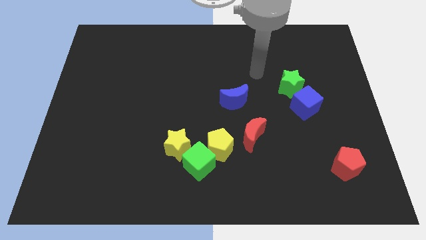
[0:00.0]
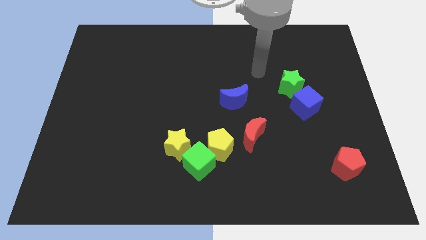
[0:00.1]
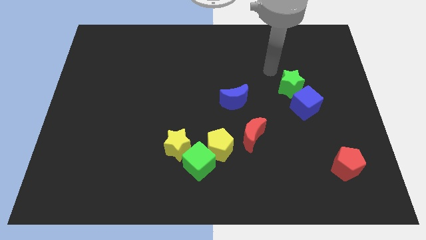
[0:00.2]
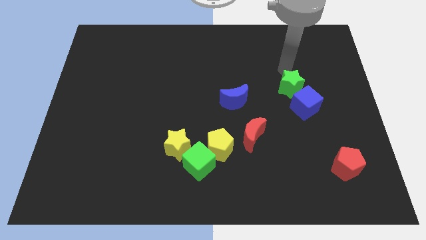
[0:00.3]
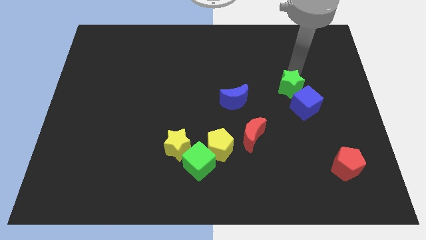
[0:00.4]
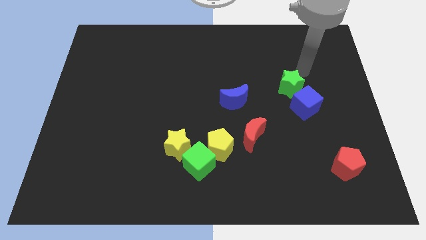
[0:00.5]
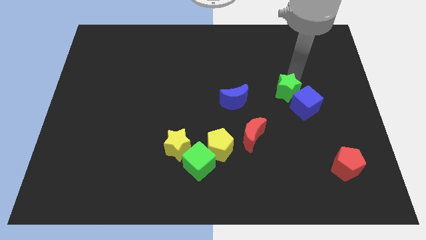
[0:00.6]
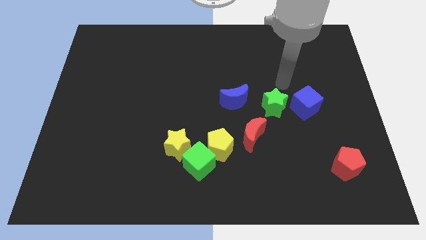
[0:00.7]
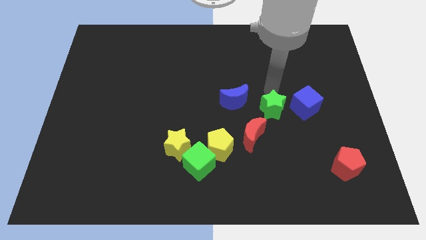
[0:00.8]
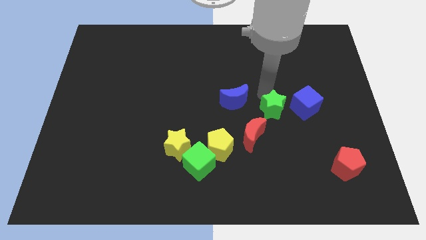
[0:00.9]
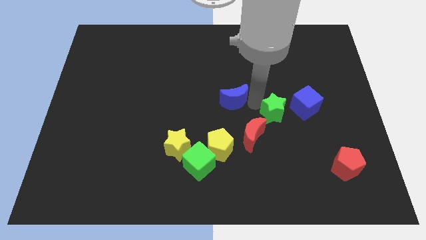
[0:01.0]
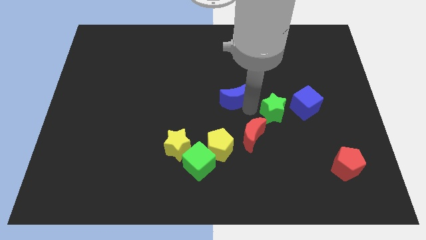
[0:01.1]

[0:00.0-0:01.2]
place the green star left to the blue cube

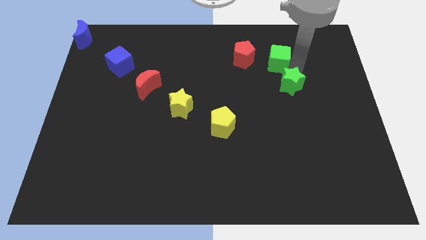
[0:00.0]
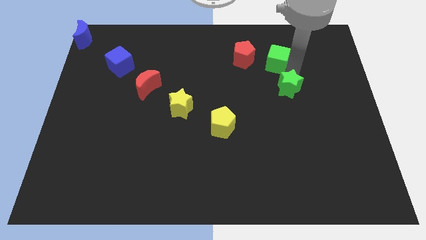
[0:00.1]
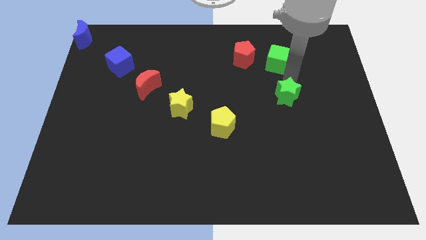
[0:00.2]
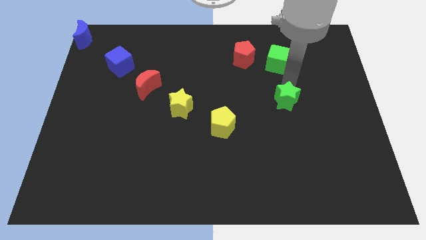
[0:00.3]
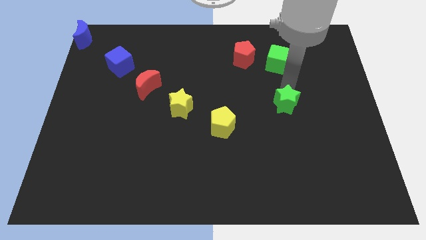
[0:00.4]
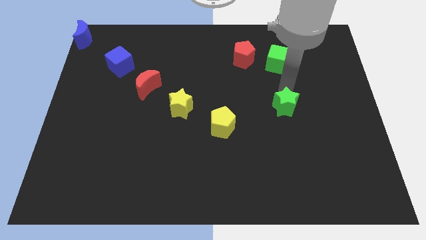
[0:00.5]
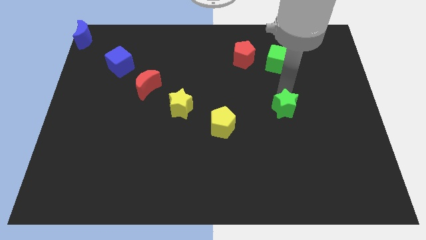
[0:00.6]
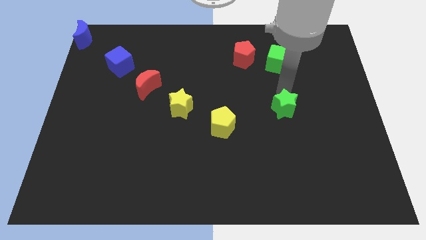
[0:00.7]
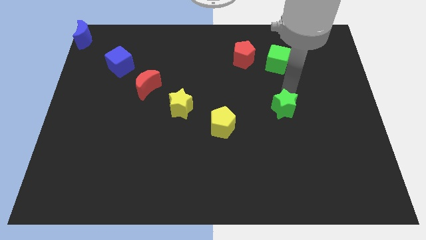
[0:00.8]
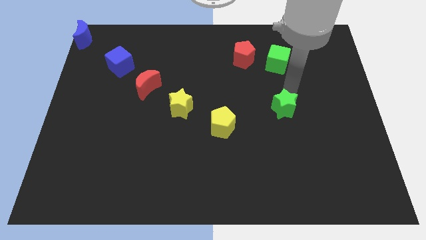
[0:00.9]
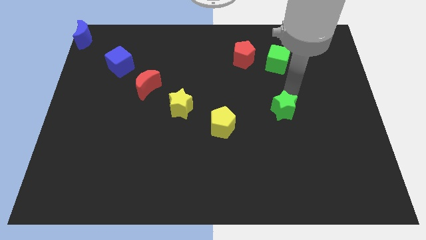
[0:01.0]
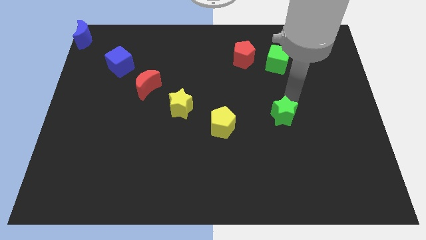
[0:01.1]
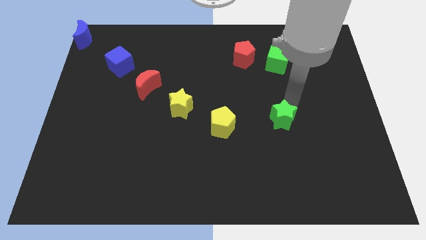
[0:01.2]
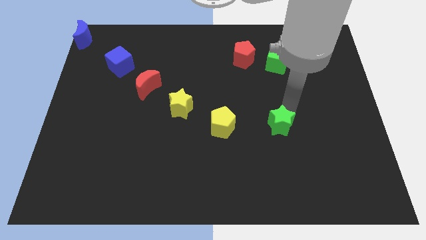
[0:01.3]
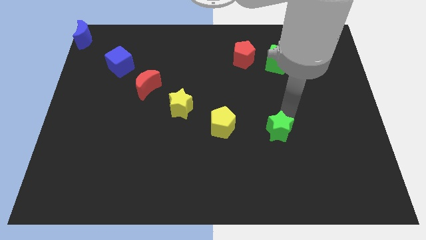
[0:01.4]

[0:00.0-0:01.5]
slightly move the green star towards the bottom

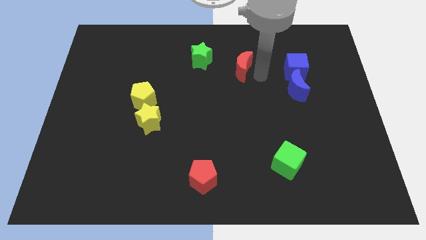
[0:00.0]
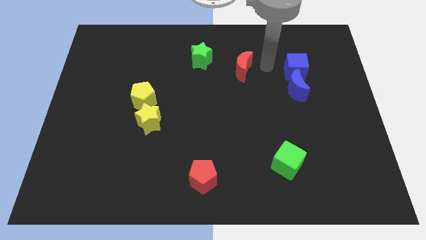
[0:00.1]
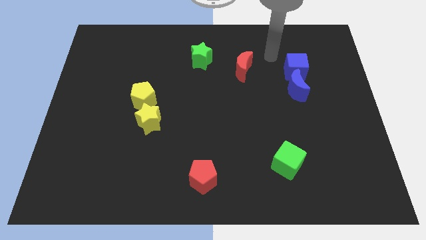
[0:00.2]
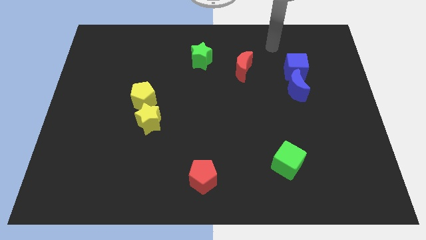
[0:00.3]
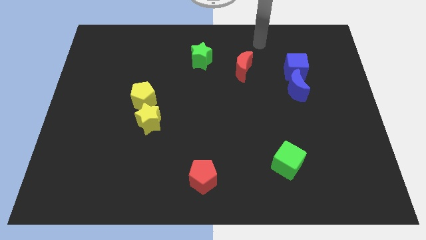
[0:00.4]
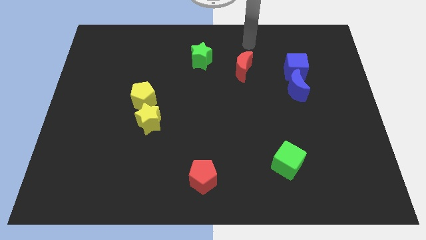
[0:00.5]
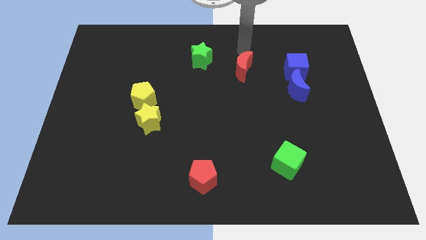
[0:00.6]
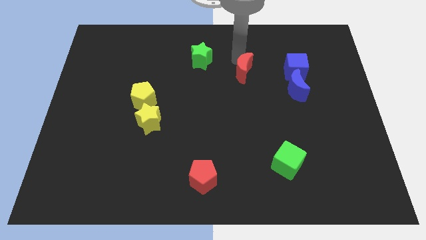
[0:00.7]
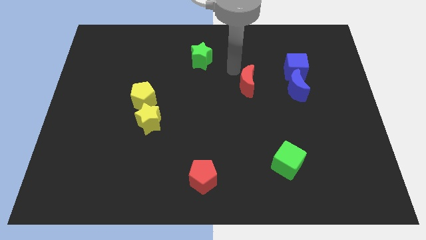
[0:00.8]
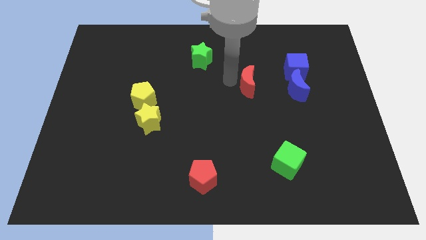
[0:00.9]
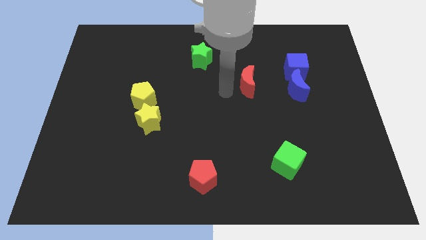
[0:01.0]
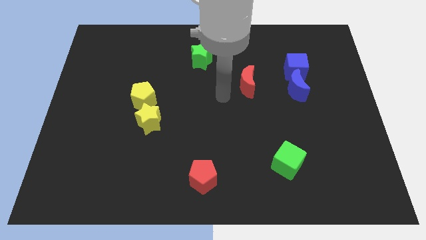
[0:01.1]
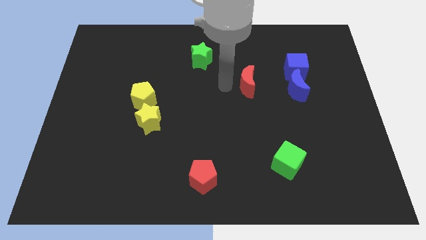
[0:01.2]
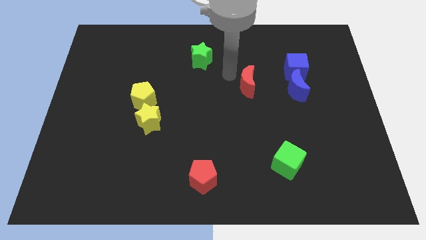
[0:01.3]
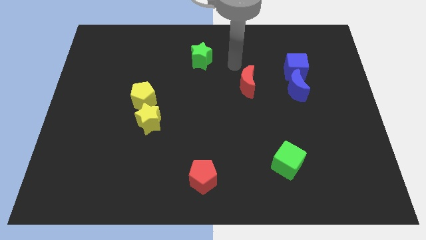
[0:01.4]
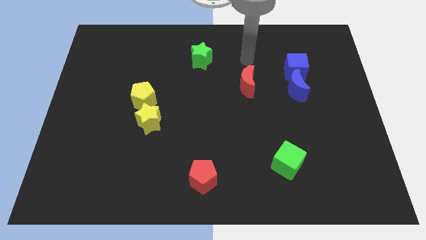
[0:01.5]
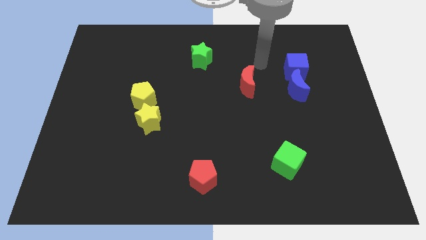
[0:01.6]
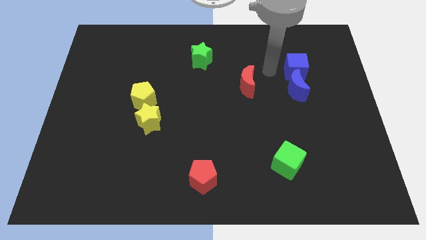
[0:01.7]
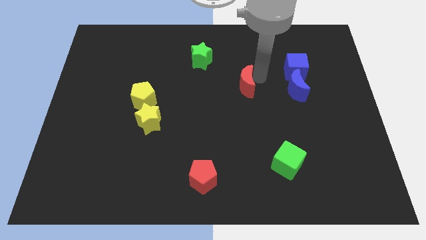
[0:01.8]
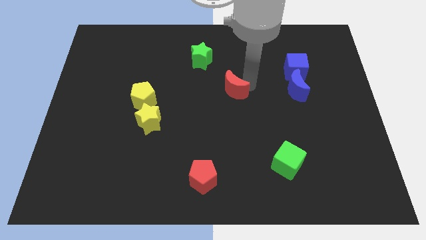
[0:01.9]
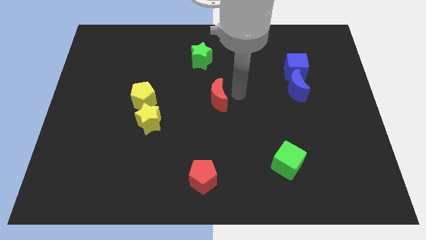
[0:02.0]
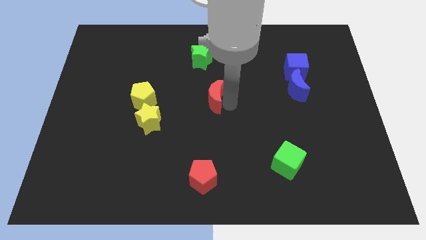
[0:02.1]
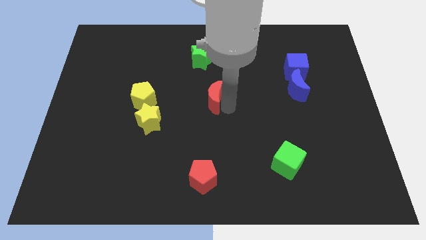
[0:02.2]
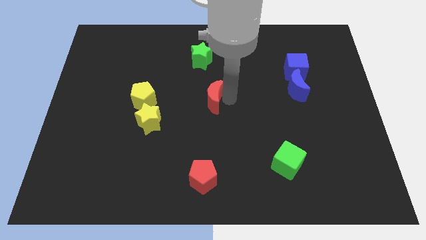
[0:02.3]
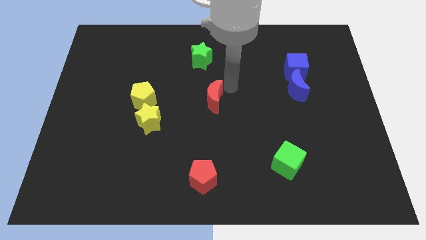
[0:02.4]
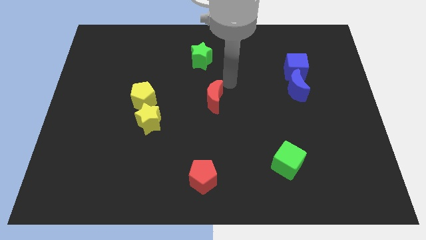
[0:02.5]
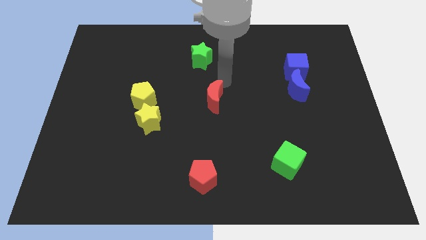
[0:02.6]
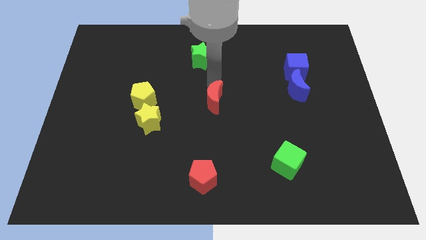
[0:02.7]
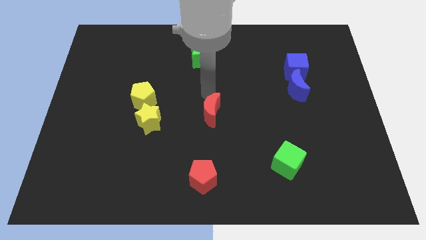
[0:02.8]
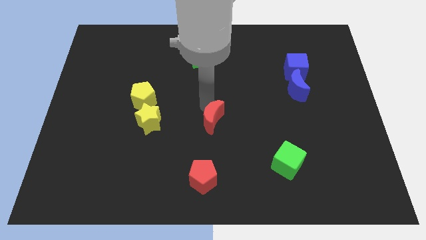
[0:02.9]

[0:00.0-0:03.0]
move the red moon towards the centre of the board

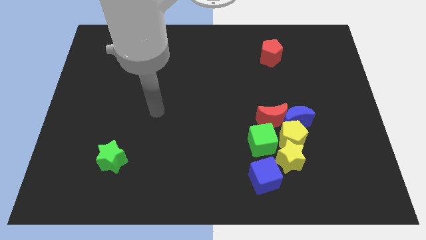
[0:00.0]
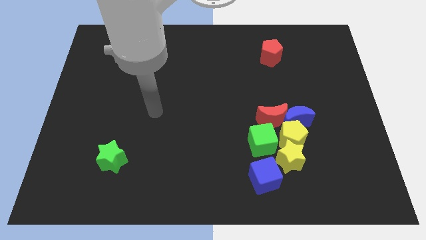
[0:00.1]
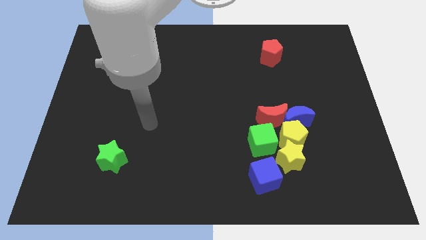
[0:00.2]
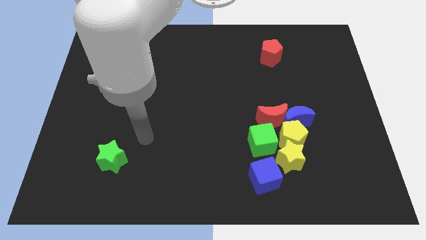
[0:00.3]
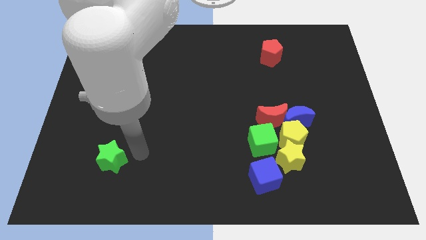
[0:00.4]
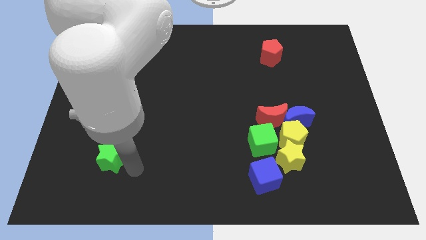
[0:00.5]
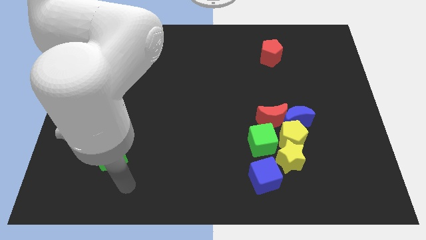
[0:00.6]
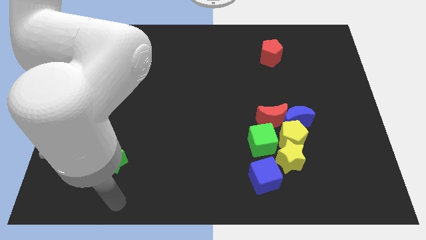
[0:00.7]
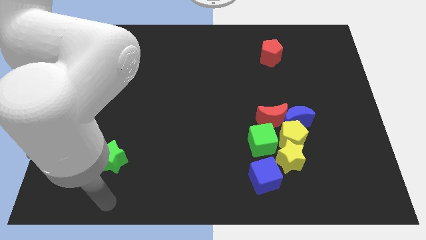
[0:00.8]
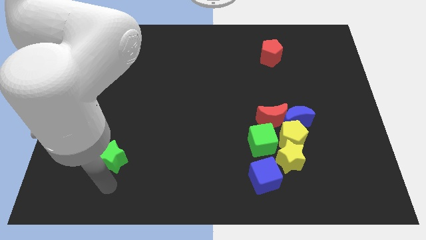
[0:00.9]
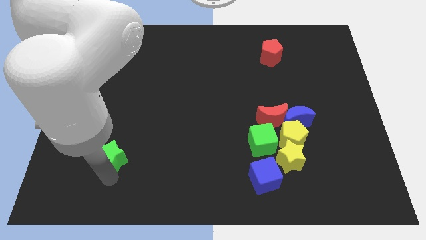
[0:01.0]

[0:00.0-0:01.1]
point the arm below the green star

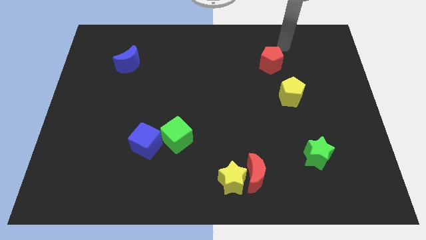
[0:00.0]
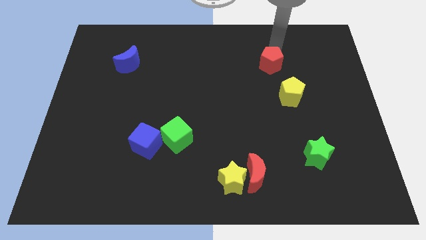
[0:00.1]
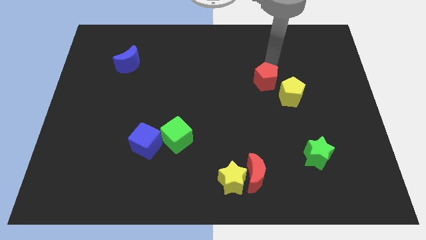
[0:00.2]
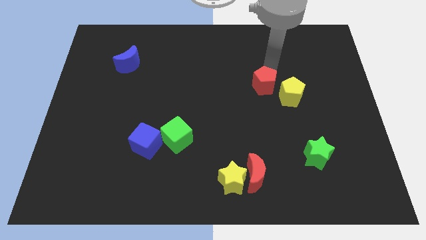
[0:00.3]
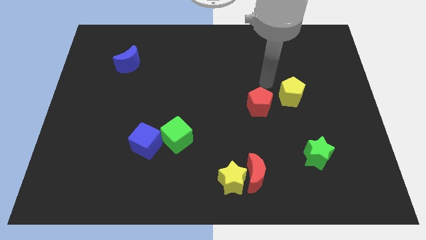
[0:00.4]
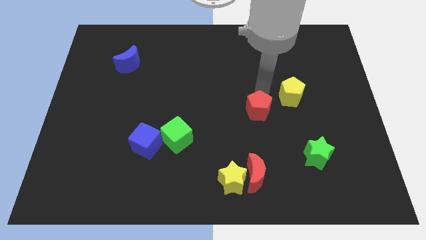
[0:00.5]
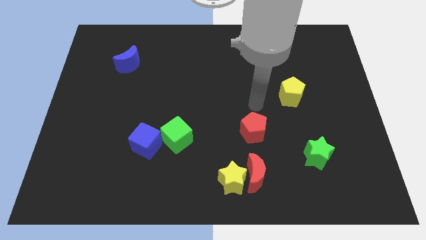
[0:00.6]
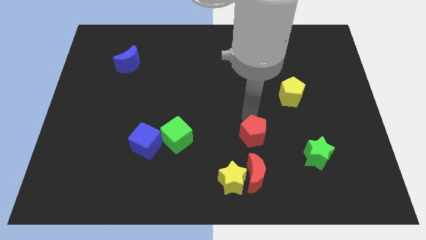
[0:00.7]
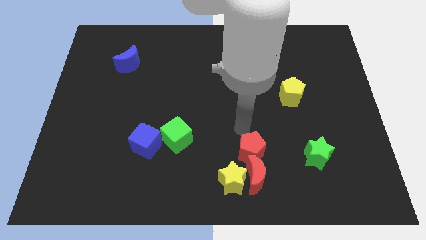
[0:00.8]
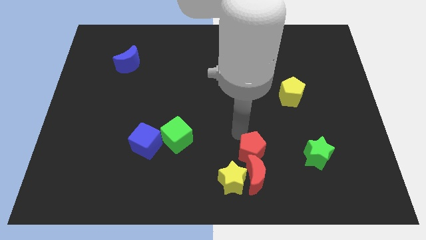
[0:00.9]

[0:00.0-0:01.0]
place pentagon above red moon

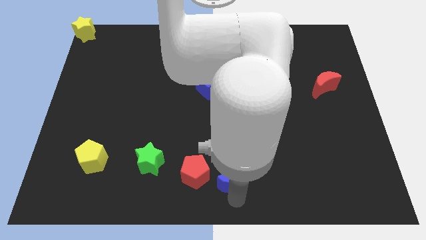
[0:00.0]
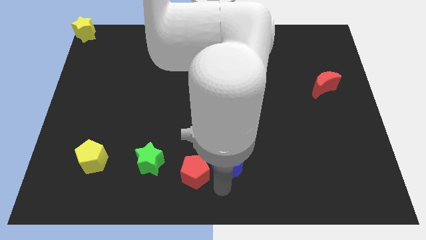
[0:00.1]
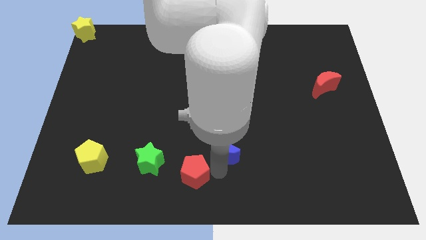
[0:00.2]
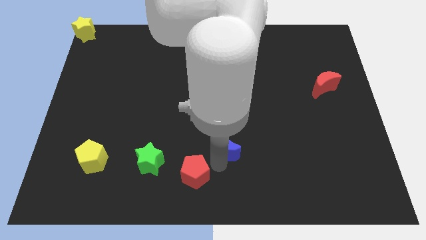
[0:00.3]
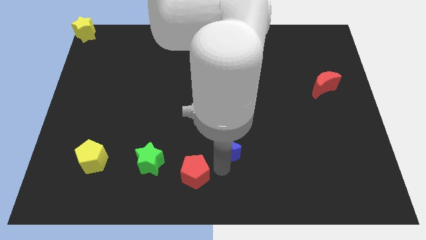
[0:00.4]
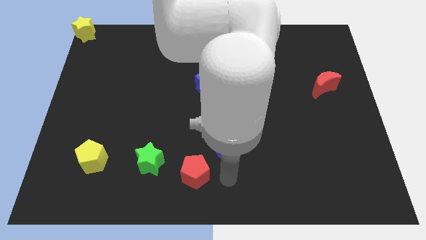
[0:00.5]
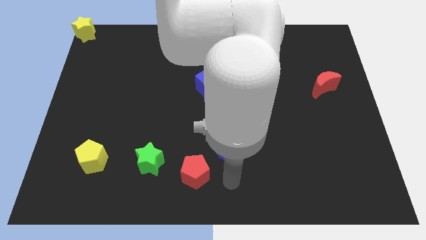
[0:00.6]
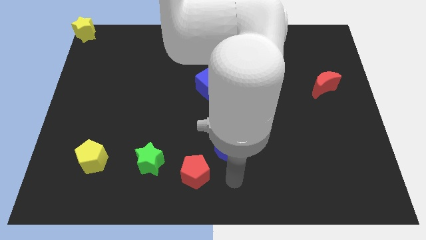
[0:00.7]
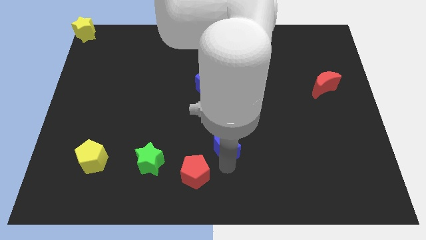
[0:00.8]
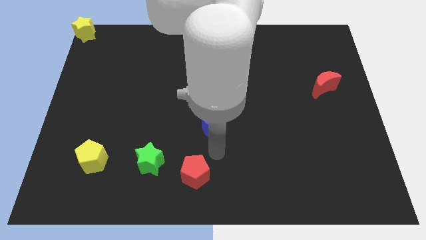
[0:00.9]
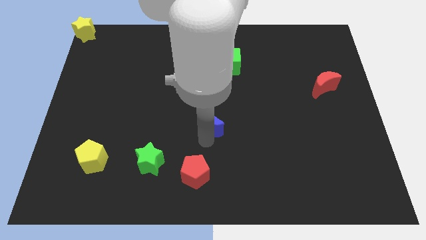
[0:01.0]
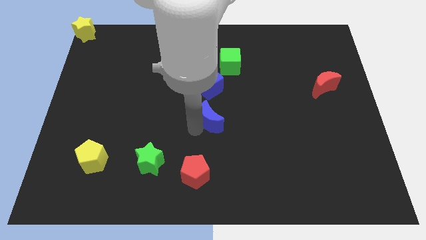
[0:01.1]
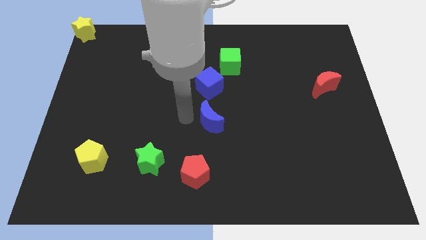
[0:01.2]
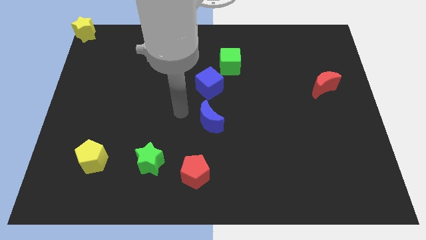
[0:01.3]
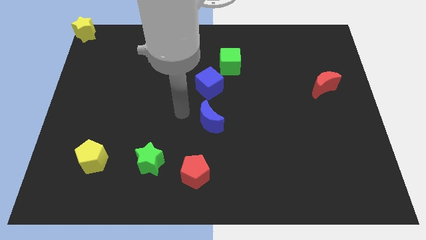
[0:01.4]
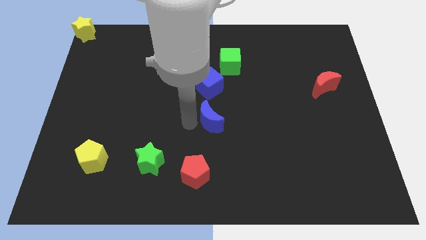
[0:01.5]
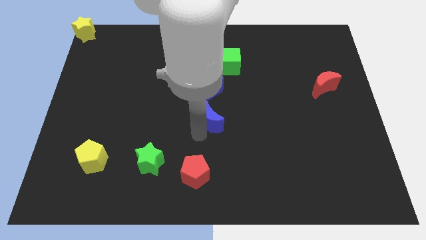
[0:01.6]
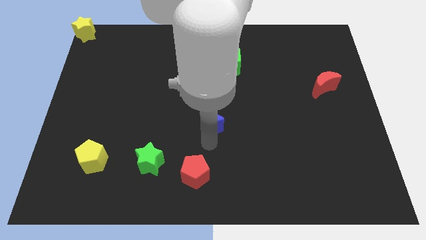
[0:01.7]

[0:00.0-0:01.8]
place the blue moon above the red pentagon
